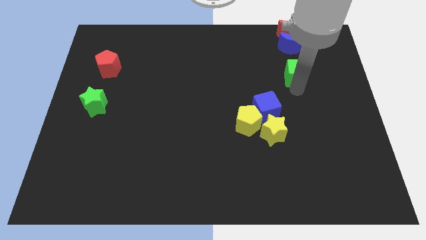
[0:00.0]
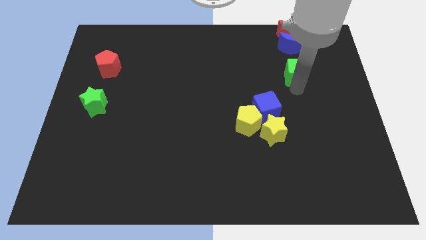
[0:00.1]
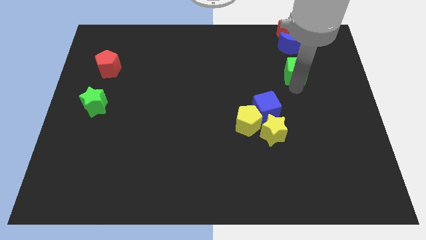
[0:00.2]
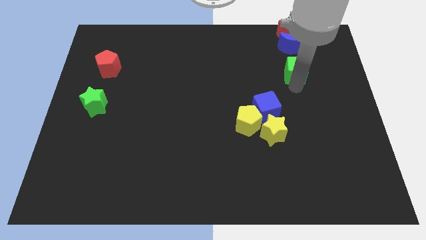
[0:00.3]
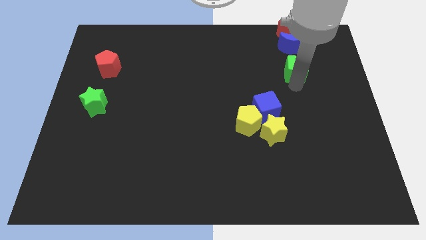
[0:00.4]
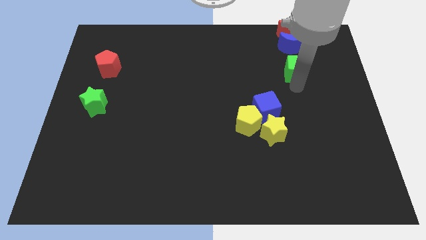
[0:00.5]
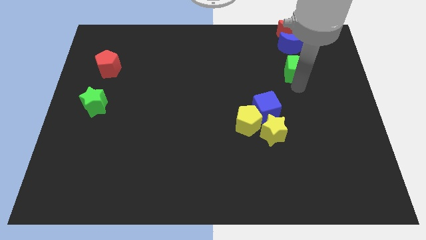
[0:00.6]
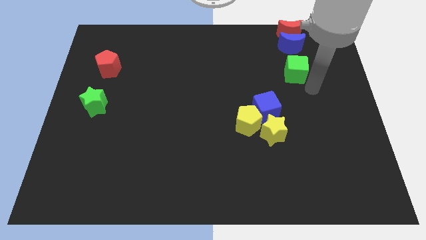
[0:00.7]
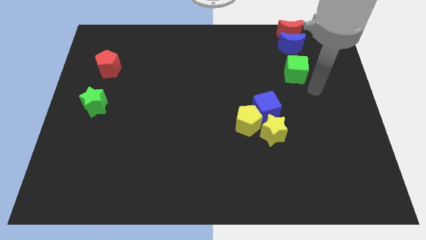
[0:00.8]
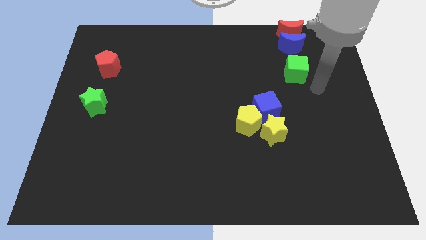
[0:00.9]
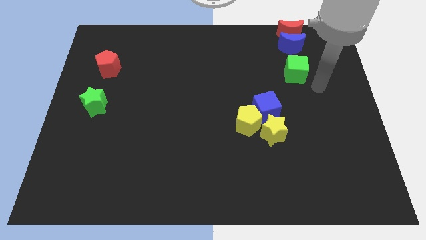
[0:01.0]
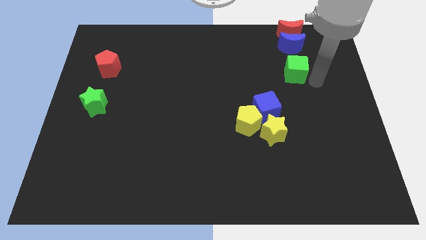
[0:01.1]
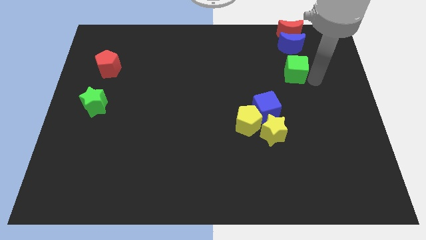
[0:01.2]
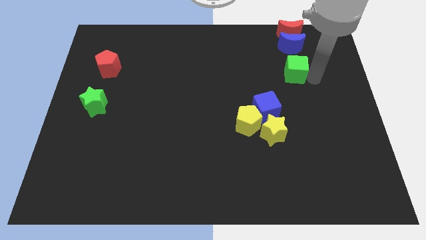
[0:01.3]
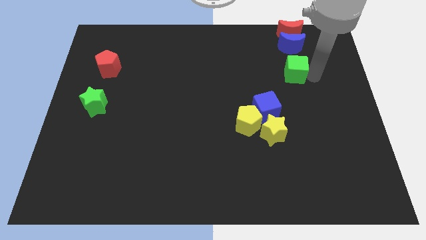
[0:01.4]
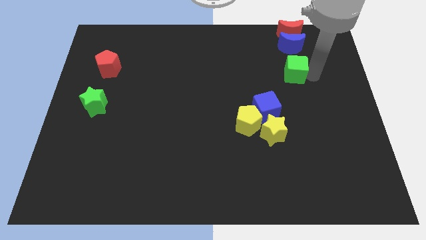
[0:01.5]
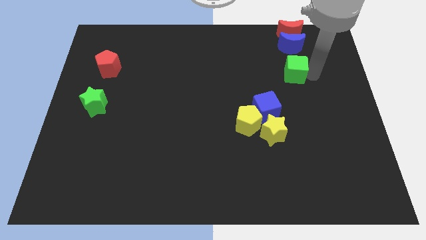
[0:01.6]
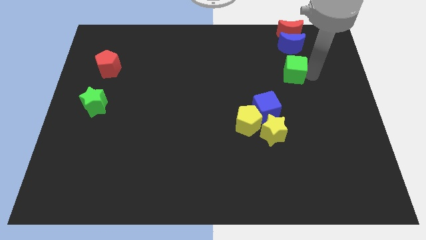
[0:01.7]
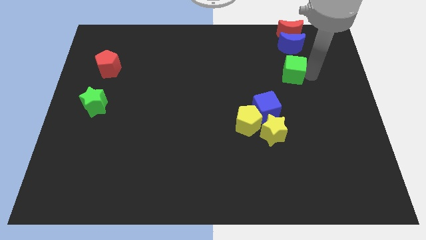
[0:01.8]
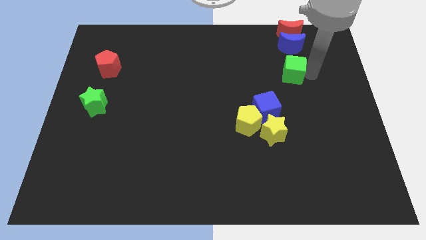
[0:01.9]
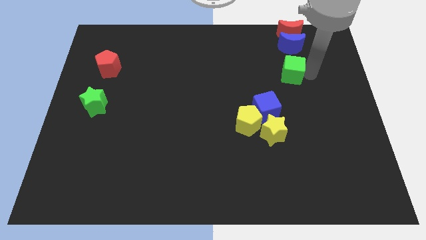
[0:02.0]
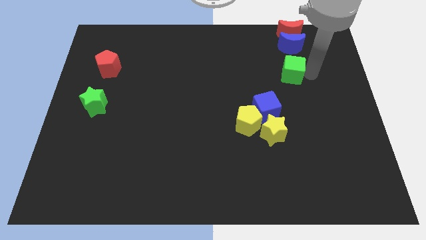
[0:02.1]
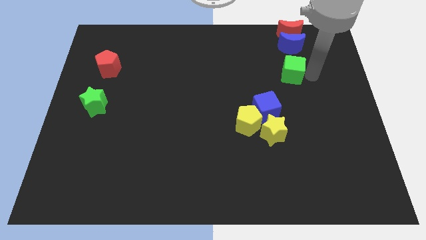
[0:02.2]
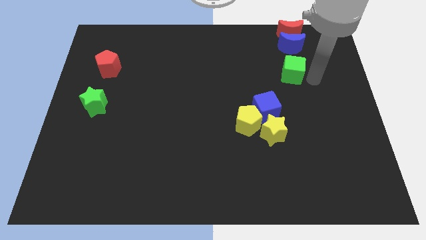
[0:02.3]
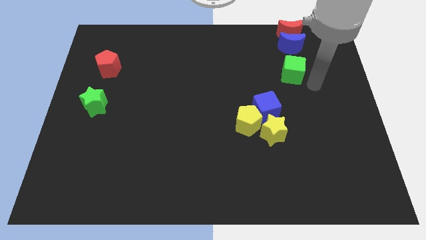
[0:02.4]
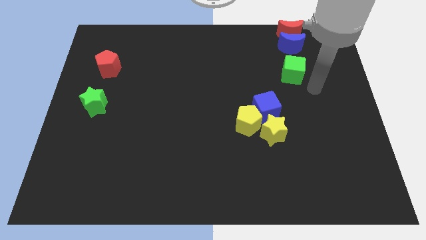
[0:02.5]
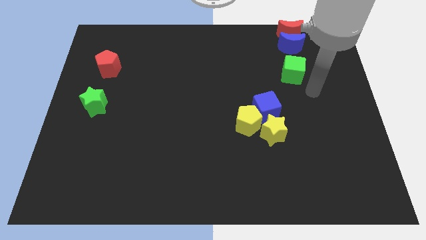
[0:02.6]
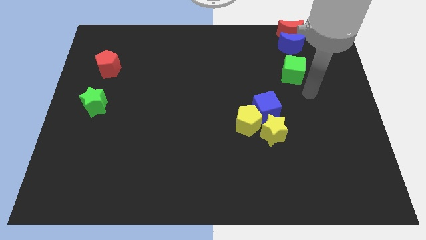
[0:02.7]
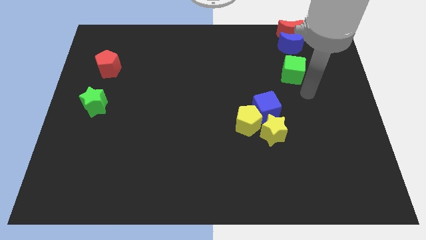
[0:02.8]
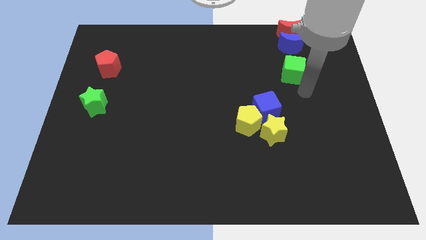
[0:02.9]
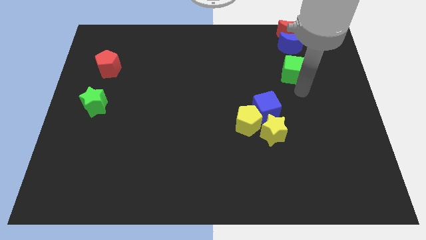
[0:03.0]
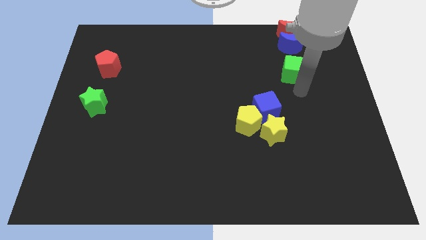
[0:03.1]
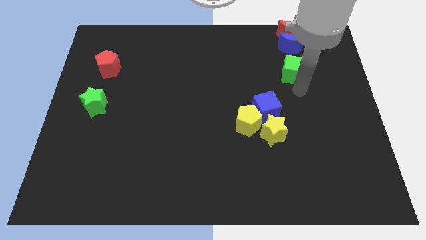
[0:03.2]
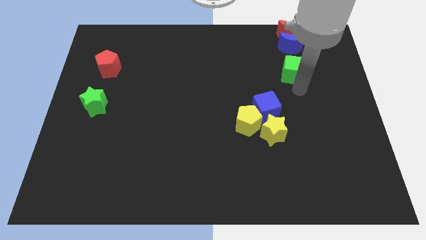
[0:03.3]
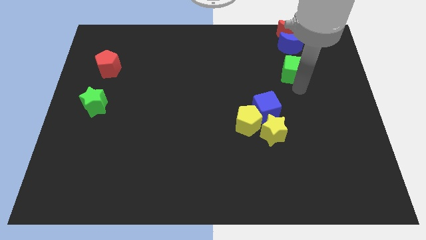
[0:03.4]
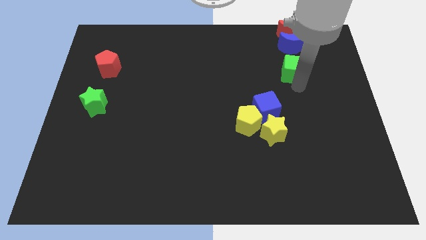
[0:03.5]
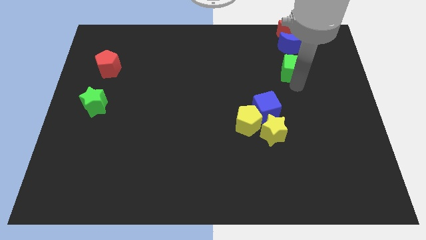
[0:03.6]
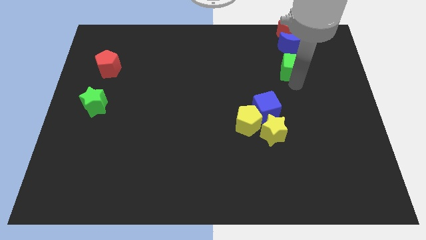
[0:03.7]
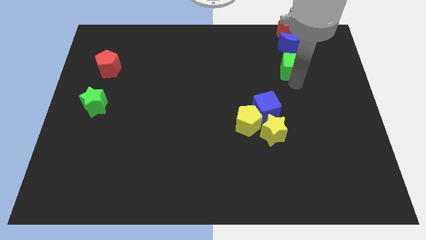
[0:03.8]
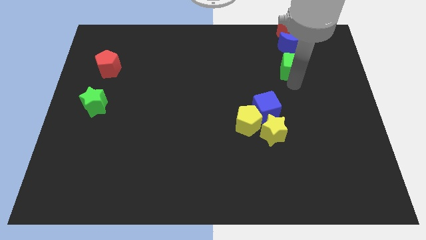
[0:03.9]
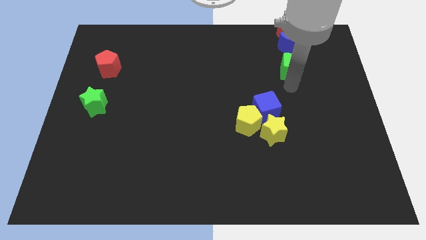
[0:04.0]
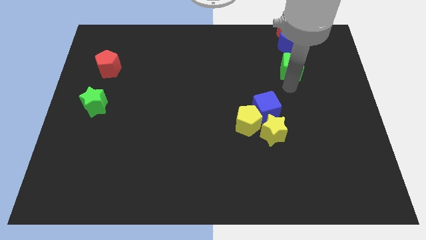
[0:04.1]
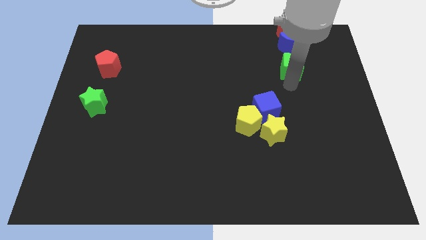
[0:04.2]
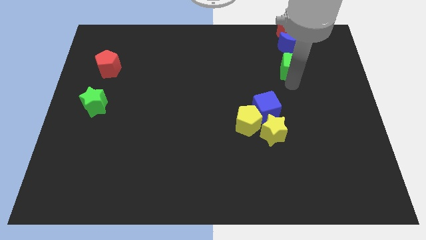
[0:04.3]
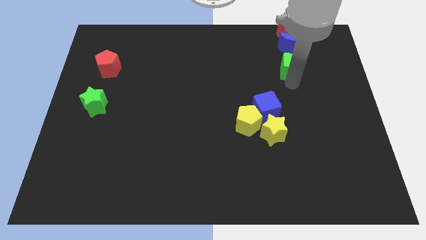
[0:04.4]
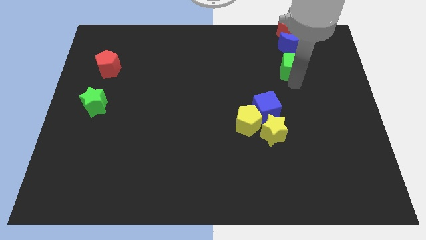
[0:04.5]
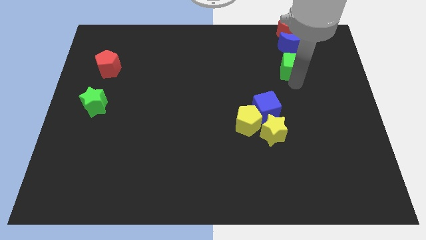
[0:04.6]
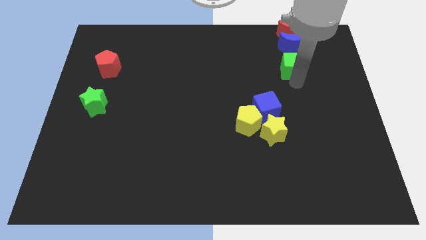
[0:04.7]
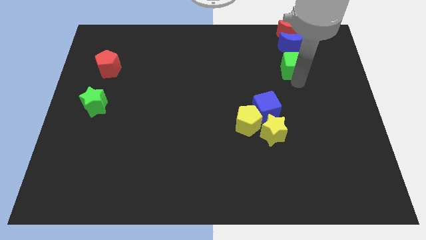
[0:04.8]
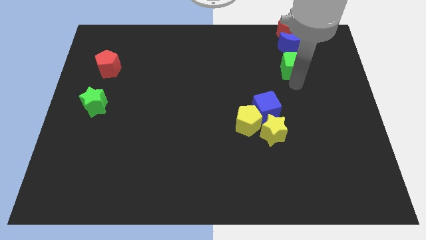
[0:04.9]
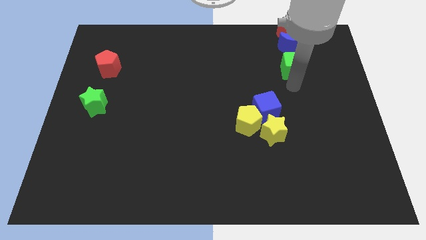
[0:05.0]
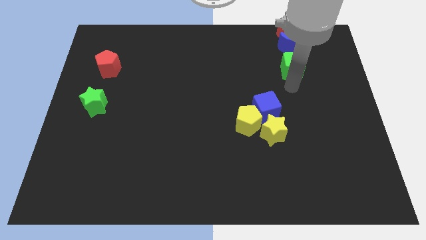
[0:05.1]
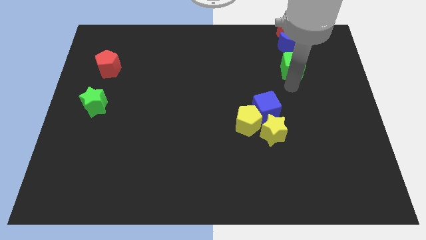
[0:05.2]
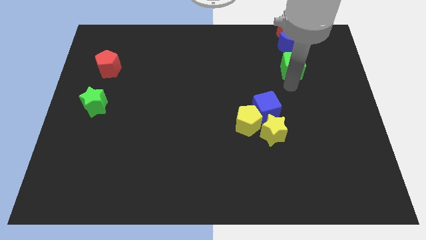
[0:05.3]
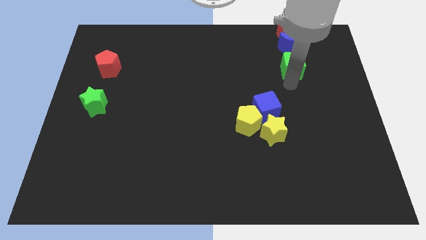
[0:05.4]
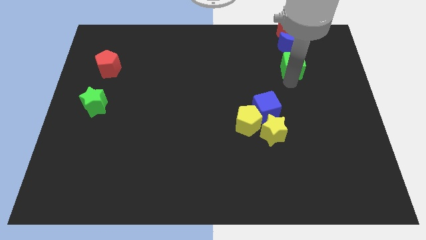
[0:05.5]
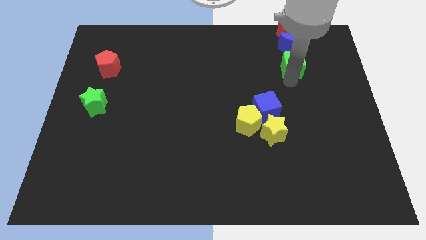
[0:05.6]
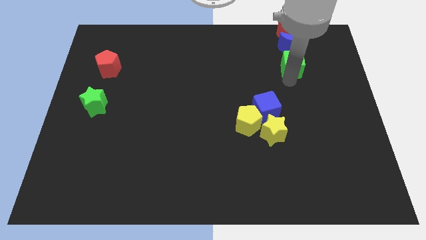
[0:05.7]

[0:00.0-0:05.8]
move the green cube slightly to the bottom of the blue crescent

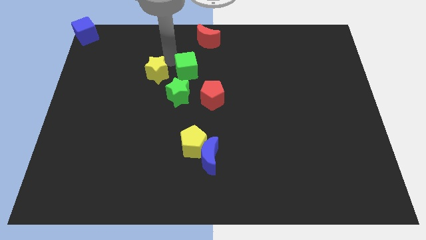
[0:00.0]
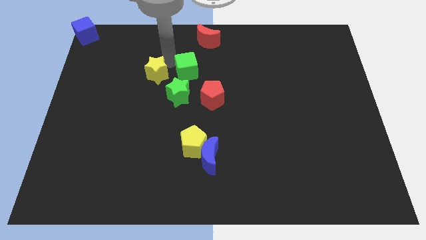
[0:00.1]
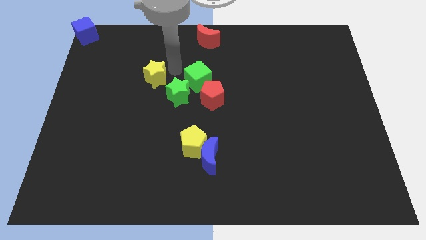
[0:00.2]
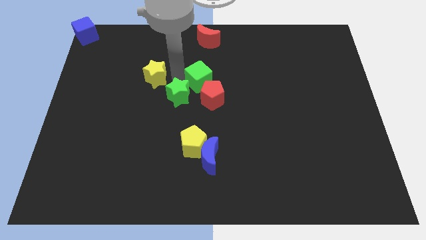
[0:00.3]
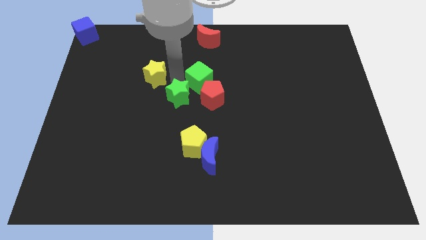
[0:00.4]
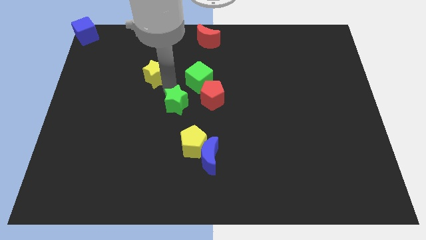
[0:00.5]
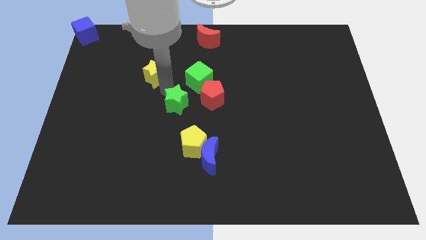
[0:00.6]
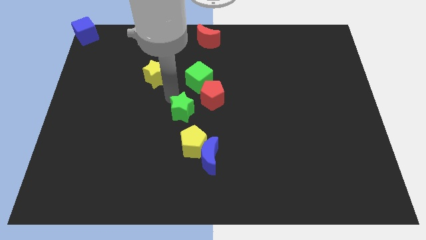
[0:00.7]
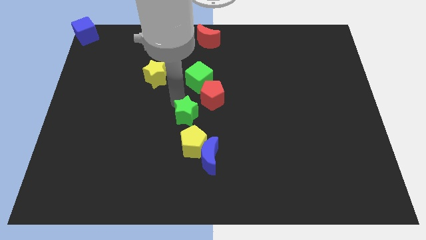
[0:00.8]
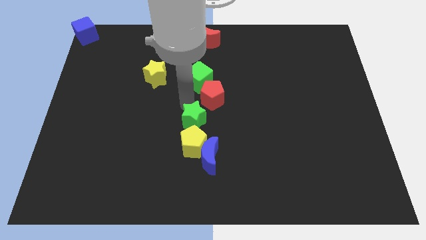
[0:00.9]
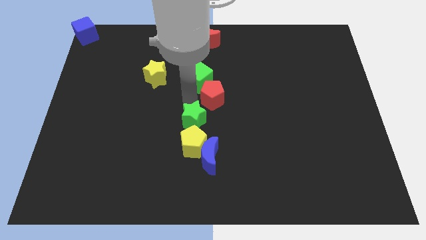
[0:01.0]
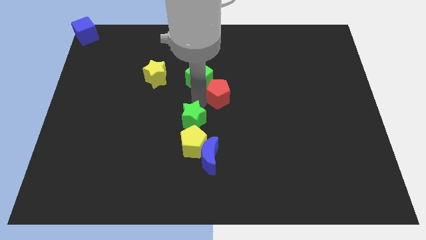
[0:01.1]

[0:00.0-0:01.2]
push the green star slightly towards the yellow pentagon

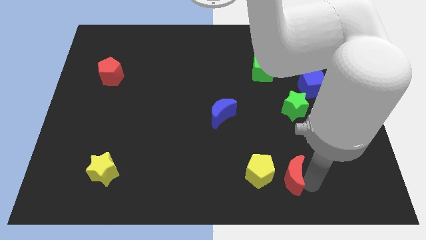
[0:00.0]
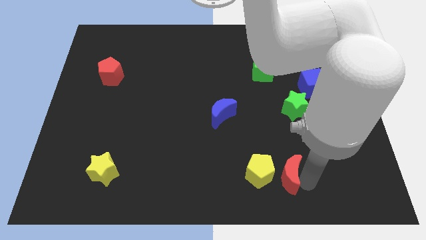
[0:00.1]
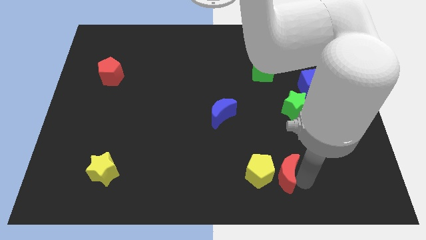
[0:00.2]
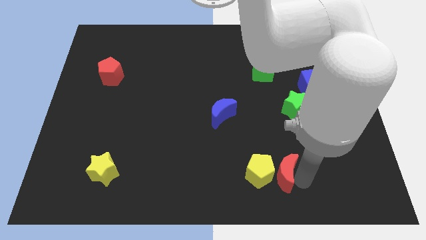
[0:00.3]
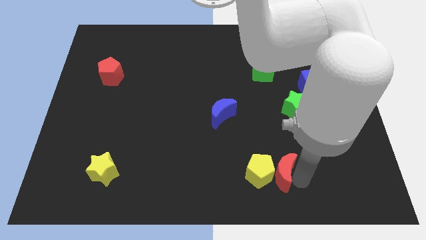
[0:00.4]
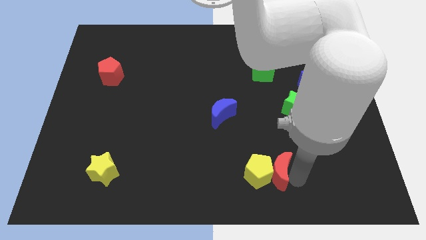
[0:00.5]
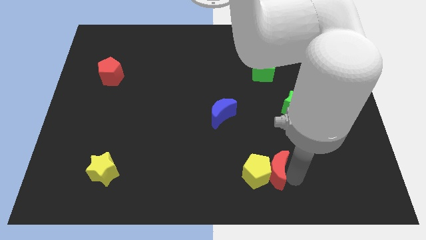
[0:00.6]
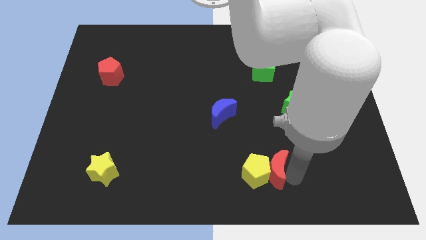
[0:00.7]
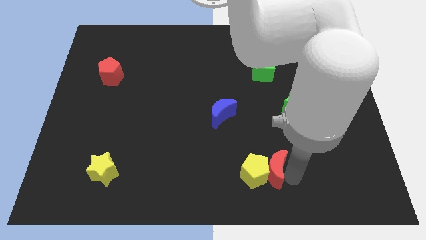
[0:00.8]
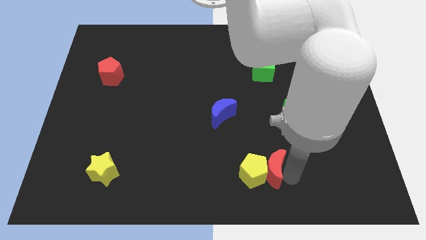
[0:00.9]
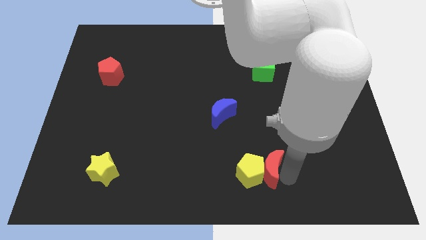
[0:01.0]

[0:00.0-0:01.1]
move red moon into yellow pentagon

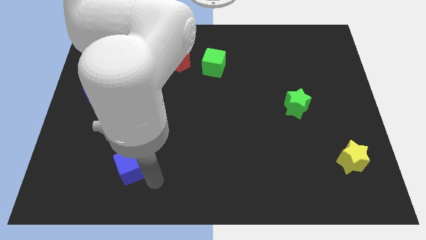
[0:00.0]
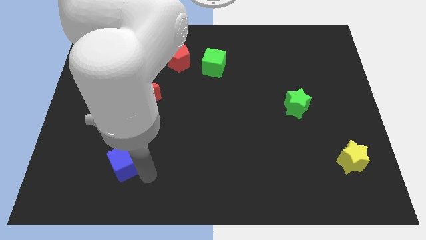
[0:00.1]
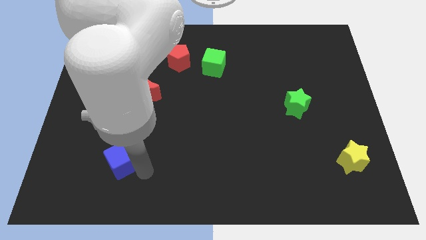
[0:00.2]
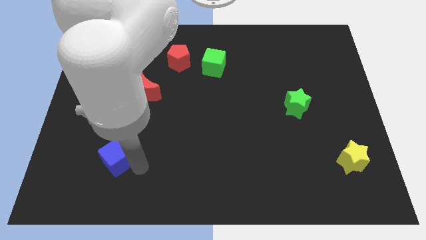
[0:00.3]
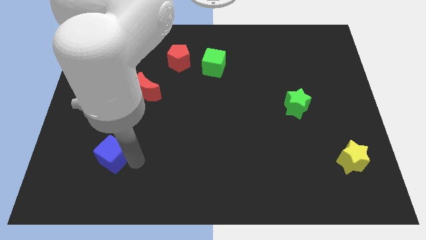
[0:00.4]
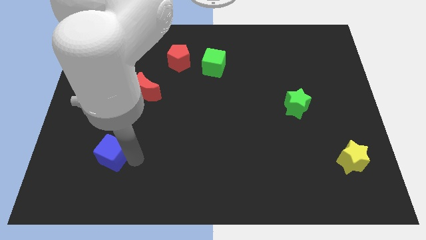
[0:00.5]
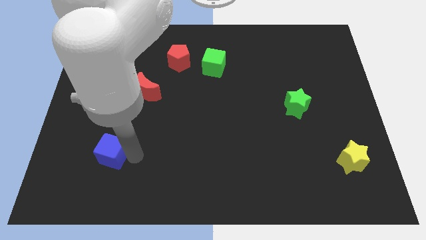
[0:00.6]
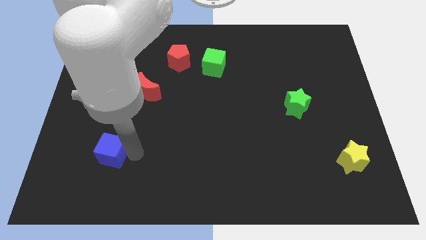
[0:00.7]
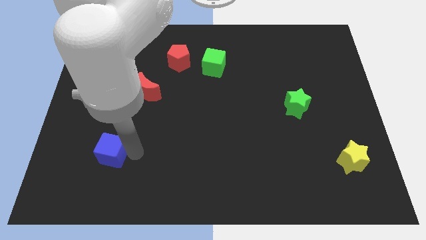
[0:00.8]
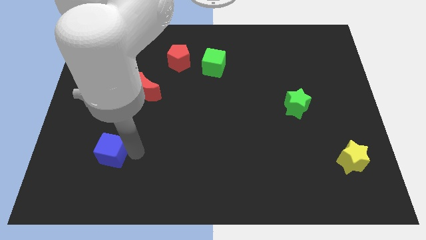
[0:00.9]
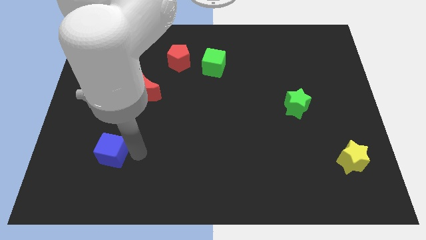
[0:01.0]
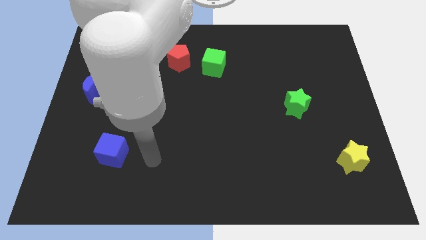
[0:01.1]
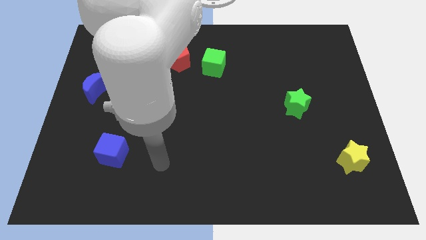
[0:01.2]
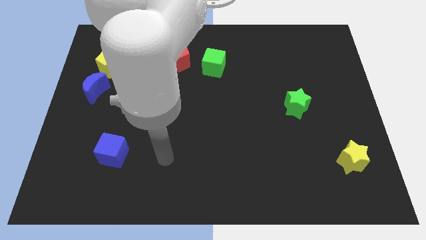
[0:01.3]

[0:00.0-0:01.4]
place blue cube to the bottom right of blue moon
